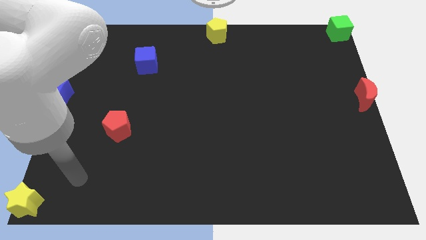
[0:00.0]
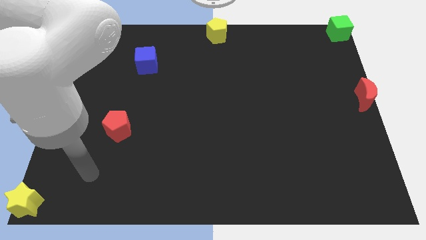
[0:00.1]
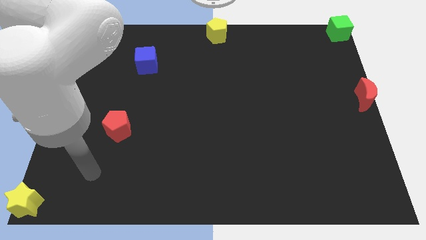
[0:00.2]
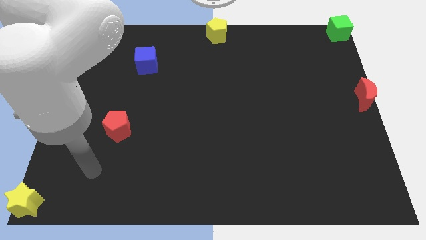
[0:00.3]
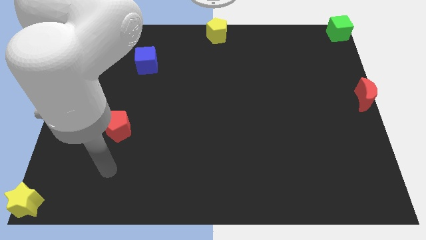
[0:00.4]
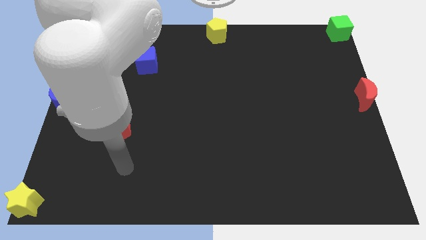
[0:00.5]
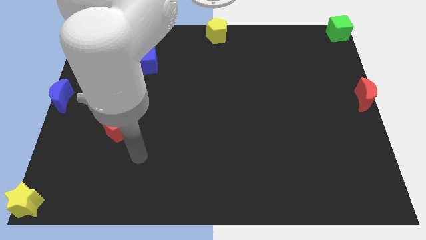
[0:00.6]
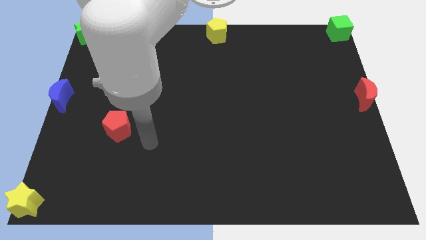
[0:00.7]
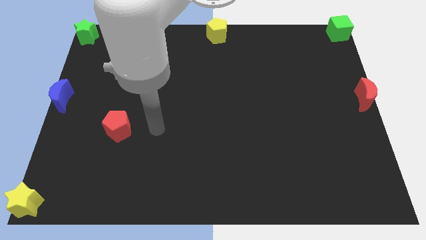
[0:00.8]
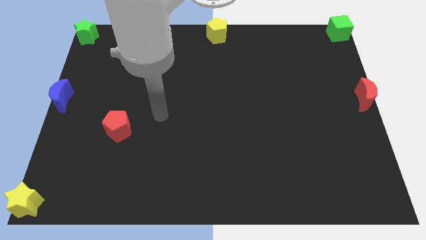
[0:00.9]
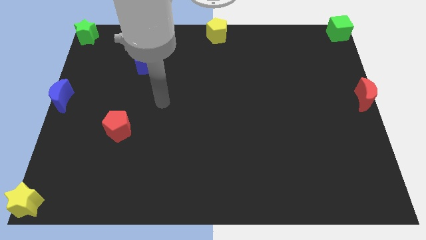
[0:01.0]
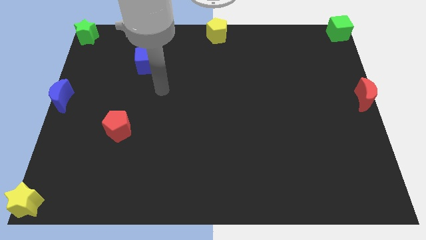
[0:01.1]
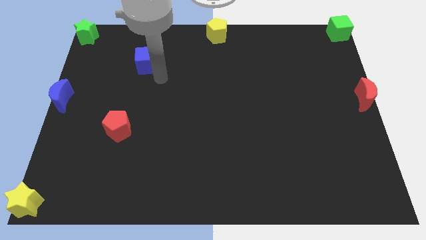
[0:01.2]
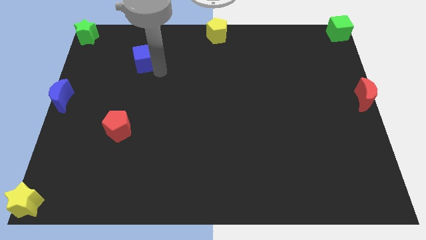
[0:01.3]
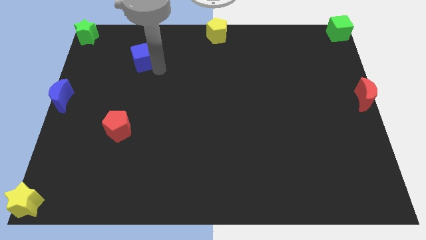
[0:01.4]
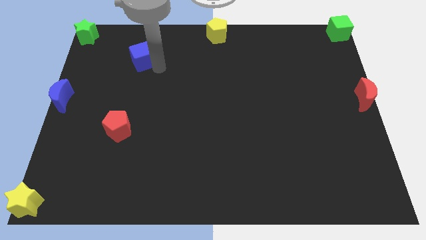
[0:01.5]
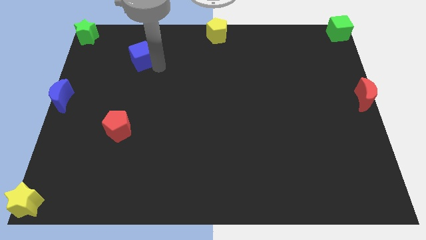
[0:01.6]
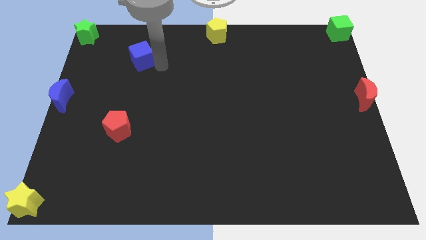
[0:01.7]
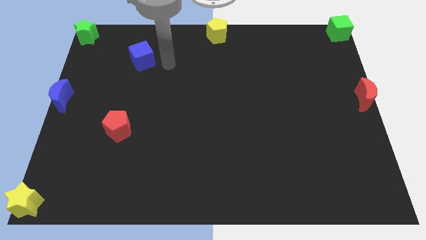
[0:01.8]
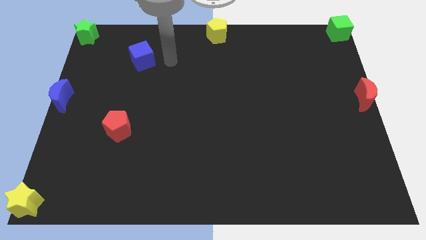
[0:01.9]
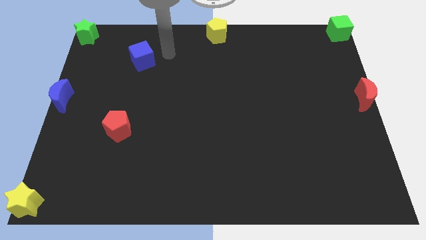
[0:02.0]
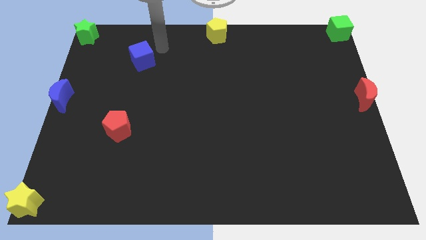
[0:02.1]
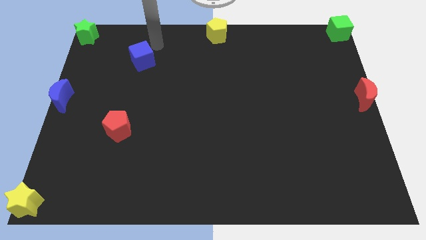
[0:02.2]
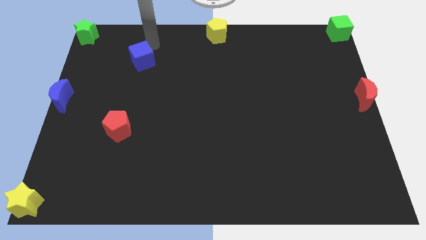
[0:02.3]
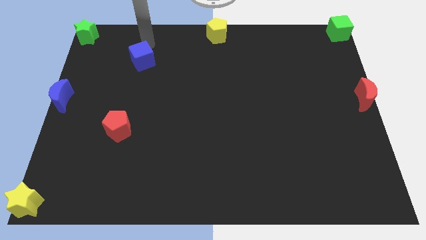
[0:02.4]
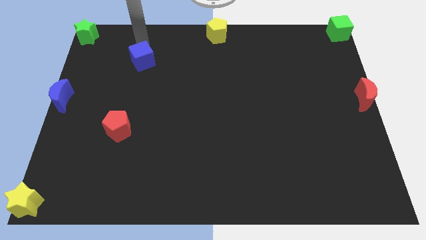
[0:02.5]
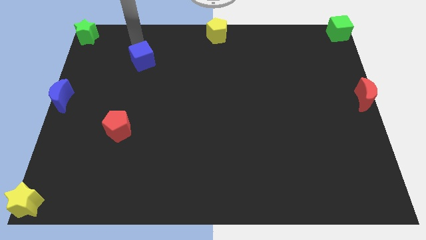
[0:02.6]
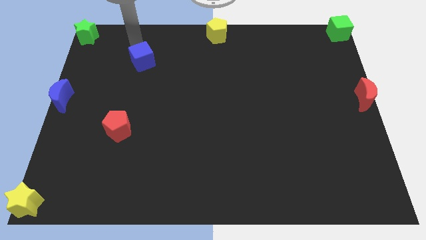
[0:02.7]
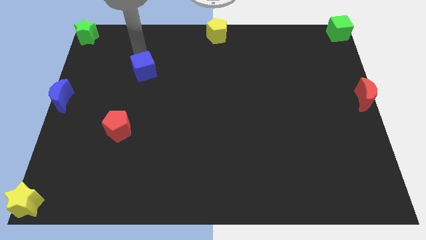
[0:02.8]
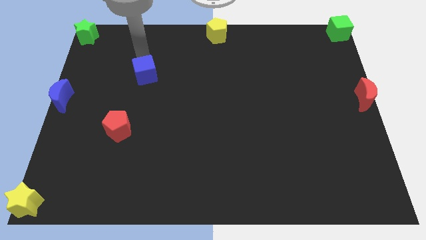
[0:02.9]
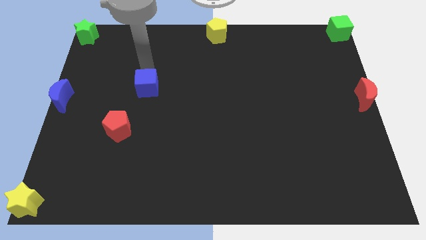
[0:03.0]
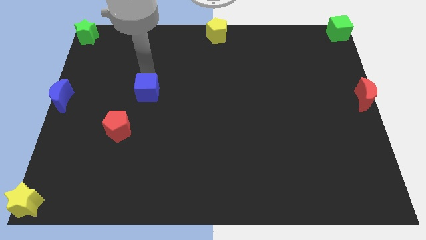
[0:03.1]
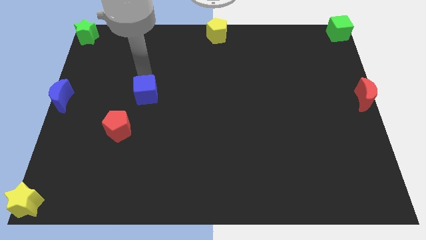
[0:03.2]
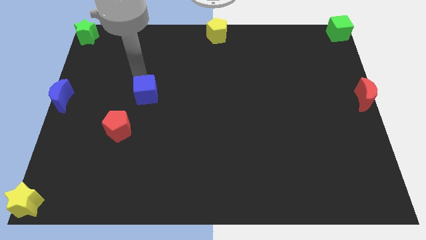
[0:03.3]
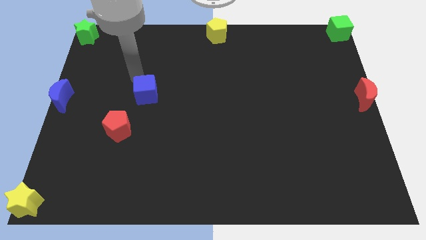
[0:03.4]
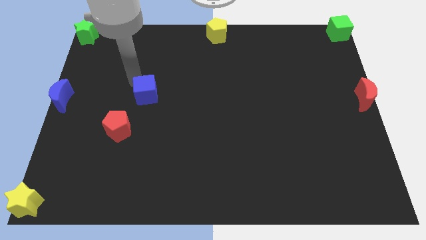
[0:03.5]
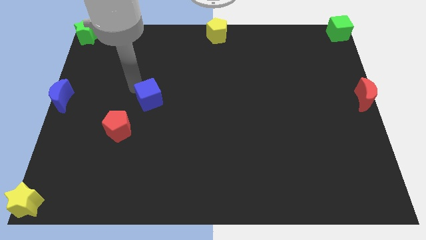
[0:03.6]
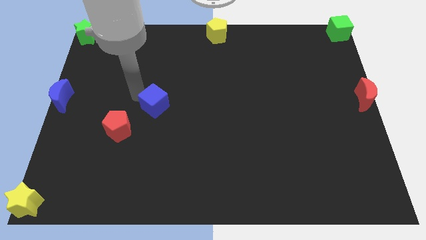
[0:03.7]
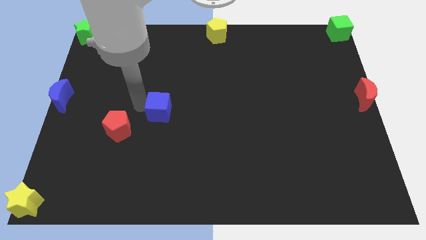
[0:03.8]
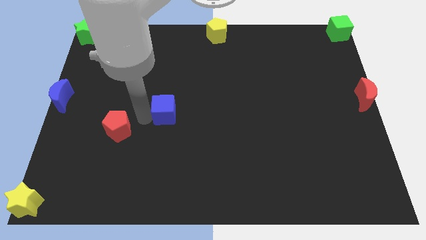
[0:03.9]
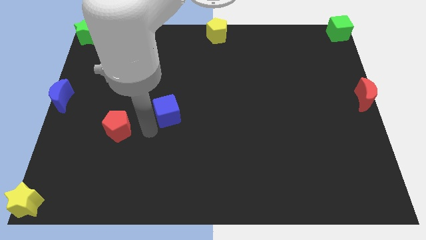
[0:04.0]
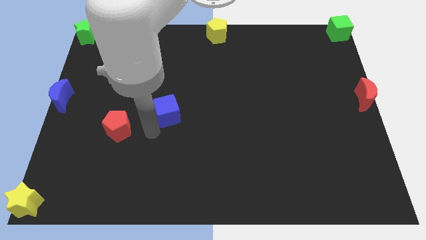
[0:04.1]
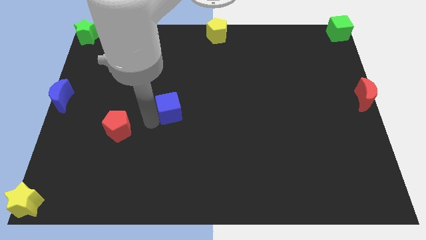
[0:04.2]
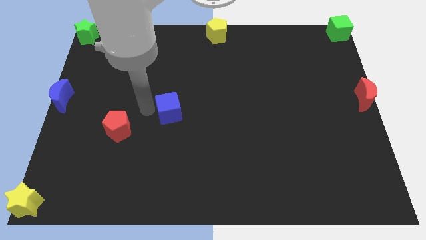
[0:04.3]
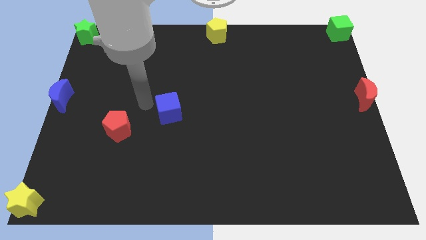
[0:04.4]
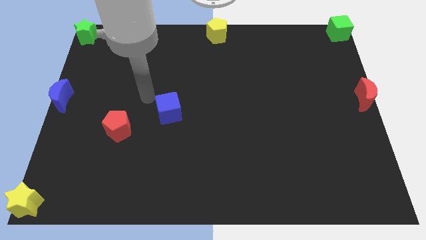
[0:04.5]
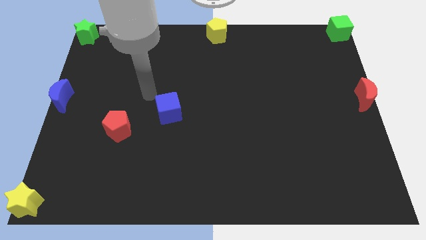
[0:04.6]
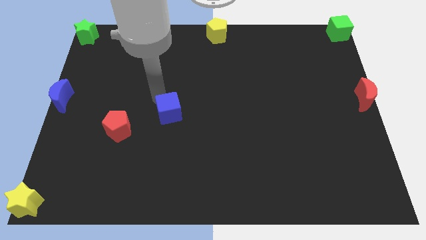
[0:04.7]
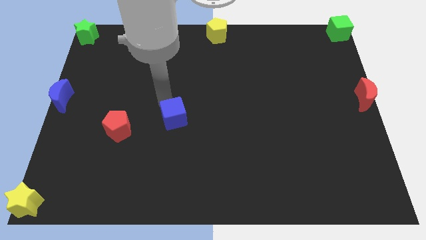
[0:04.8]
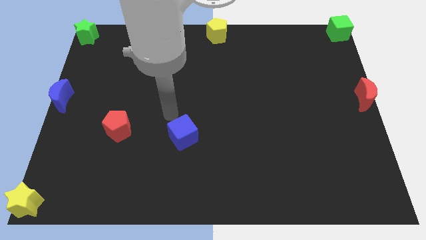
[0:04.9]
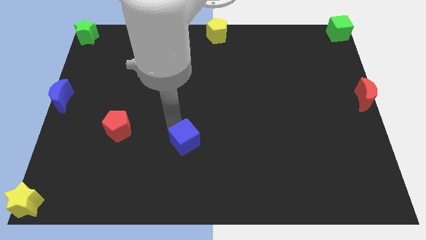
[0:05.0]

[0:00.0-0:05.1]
push the blue cube to the right of the red pentagon

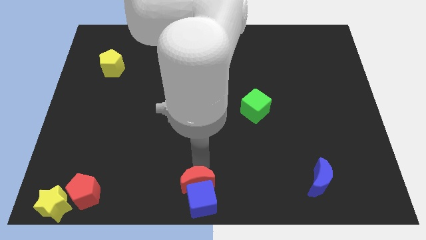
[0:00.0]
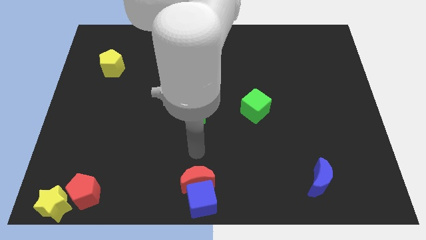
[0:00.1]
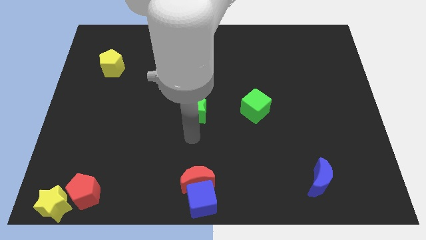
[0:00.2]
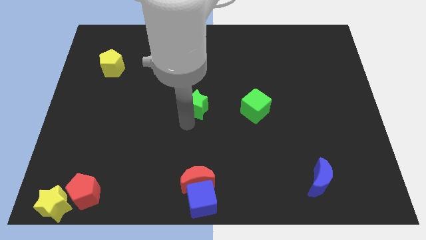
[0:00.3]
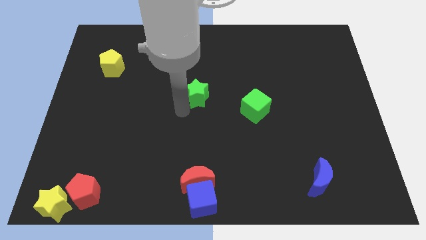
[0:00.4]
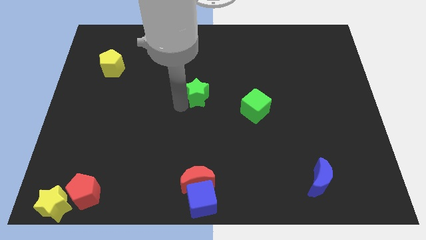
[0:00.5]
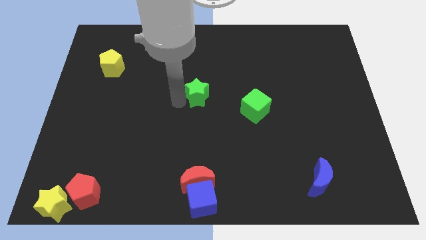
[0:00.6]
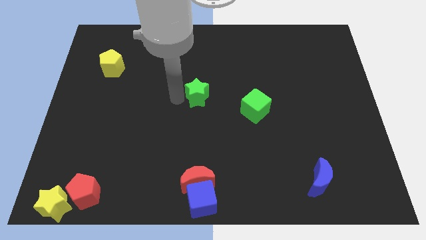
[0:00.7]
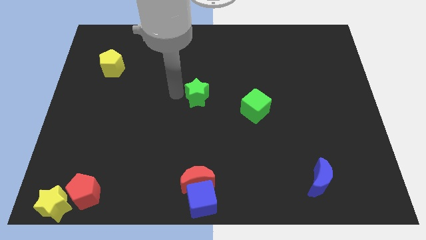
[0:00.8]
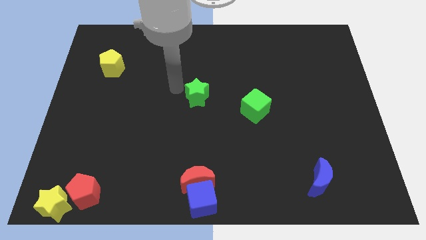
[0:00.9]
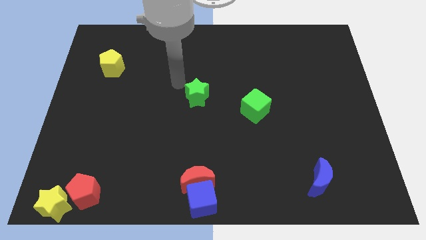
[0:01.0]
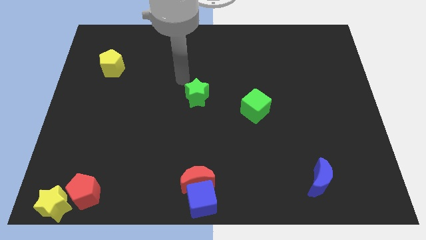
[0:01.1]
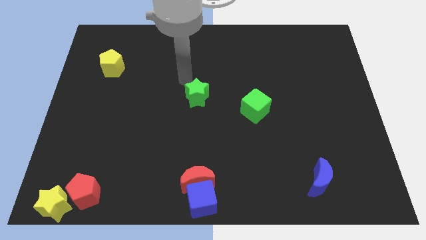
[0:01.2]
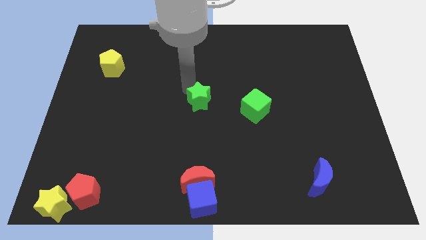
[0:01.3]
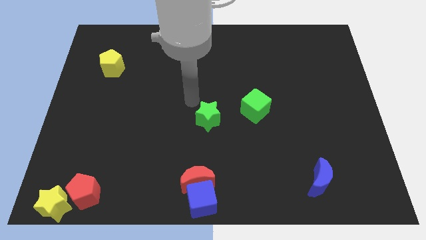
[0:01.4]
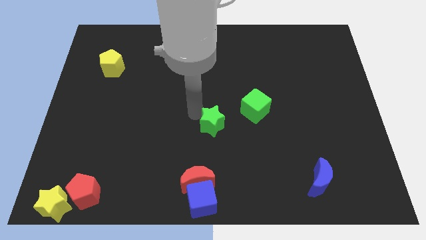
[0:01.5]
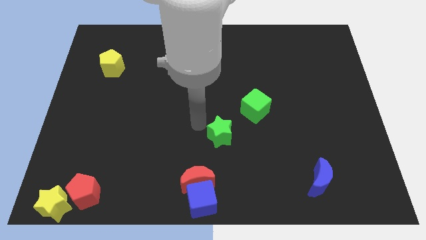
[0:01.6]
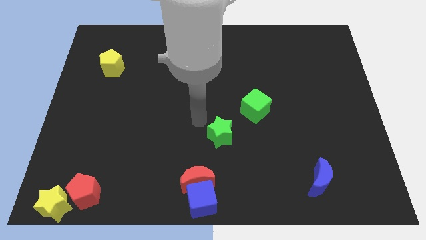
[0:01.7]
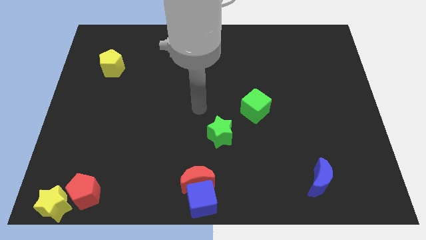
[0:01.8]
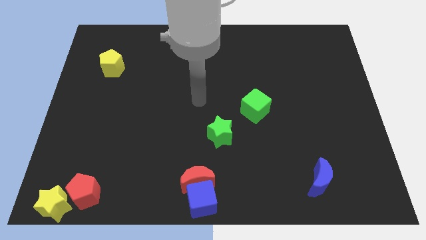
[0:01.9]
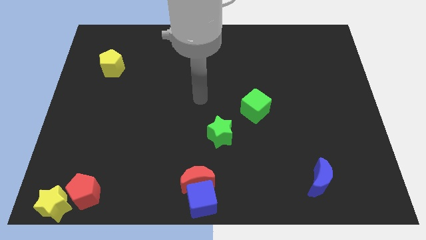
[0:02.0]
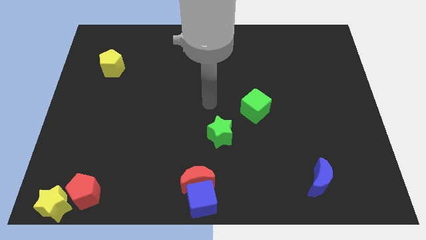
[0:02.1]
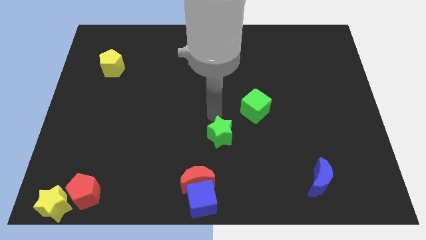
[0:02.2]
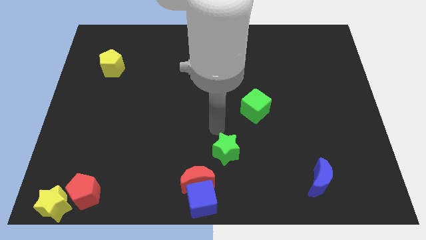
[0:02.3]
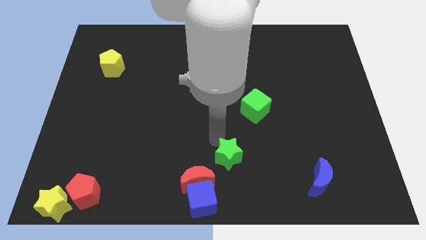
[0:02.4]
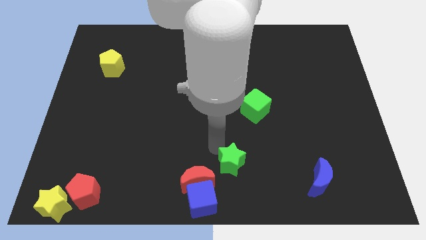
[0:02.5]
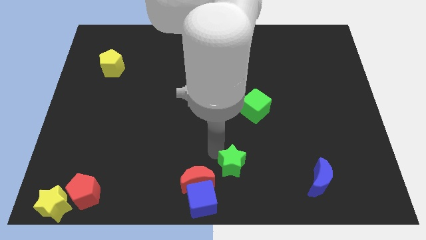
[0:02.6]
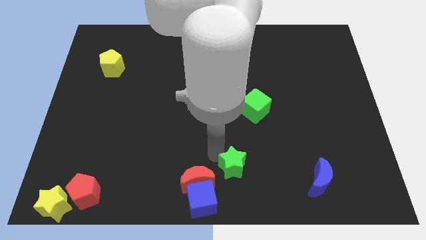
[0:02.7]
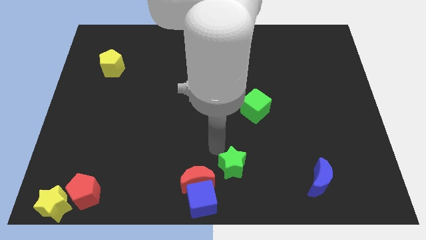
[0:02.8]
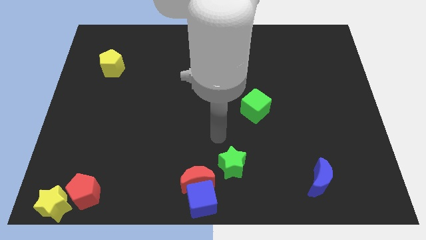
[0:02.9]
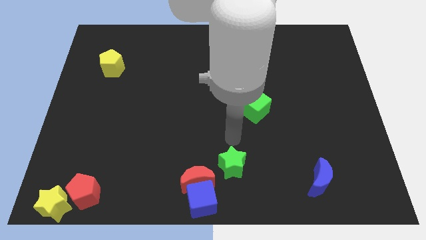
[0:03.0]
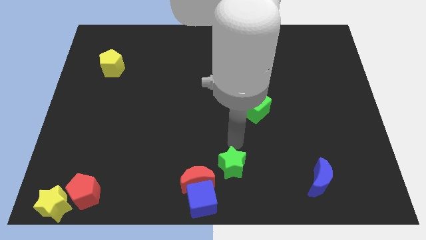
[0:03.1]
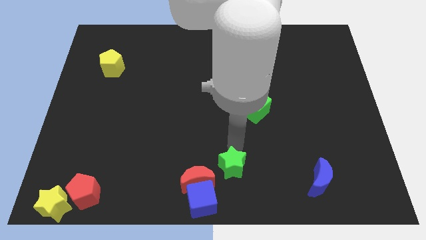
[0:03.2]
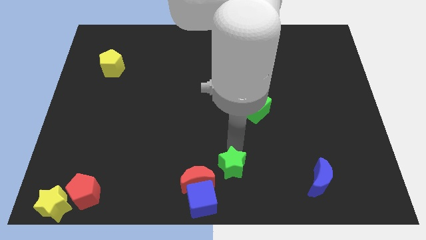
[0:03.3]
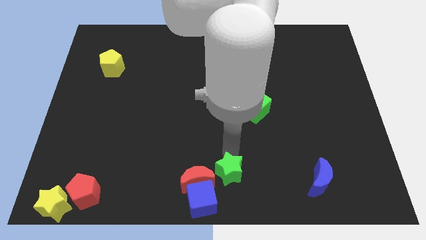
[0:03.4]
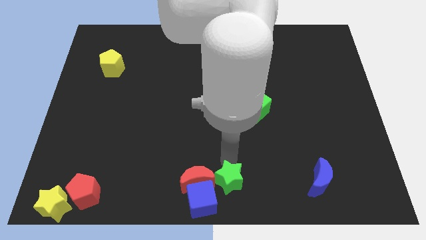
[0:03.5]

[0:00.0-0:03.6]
push the green star to the right of the red crescent

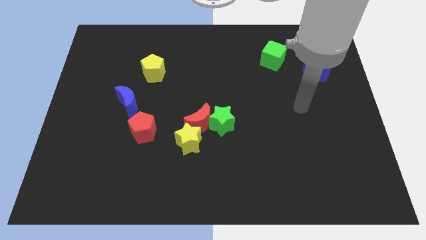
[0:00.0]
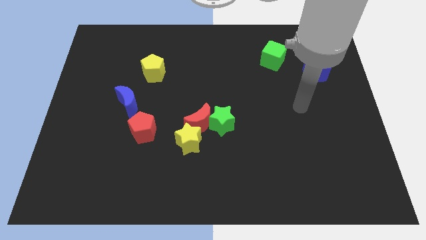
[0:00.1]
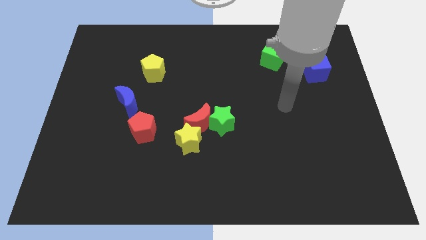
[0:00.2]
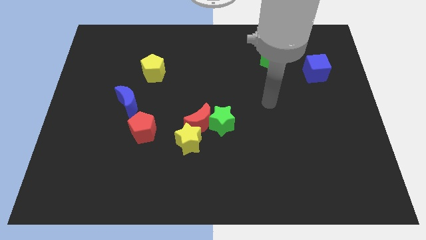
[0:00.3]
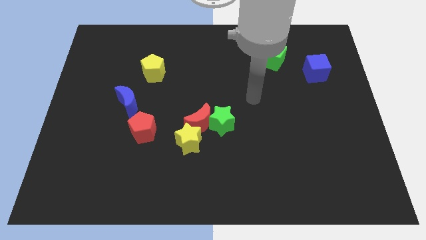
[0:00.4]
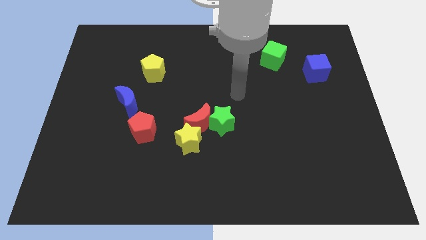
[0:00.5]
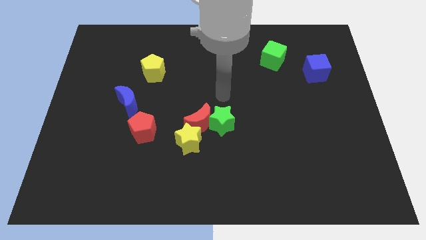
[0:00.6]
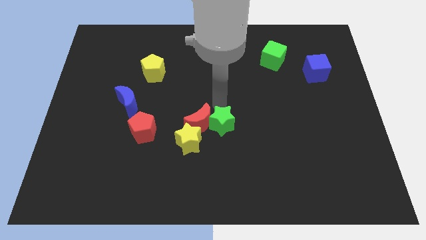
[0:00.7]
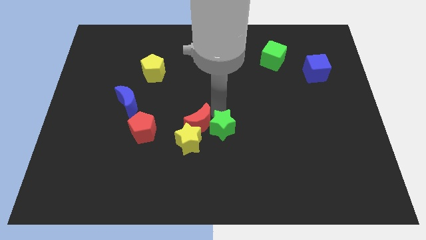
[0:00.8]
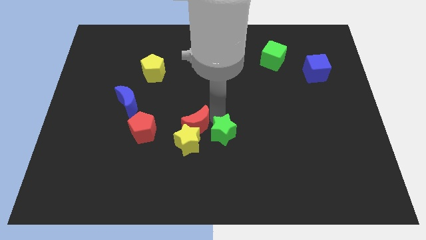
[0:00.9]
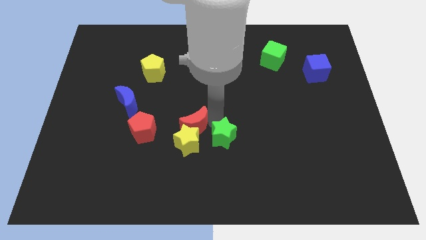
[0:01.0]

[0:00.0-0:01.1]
move arm near green star
